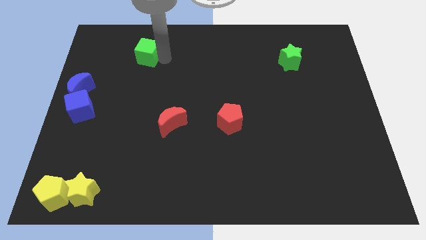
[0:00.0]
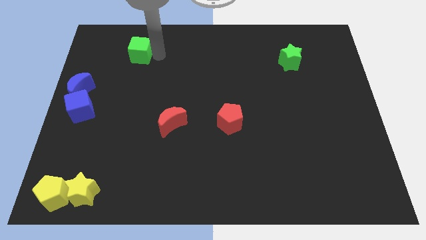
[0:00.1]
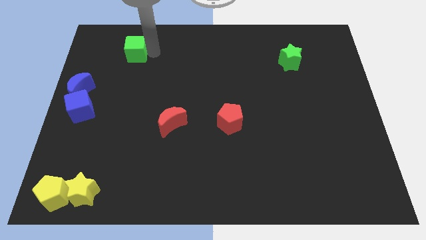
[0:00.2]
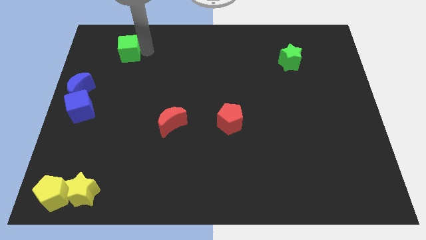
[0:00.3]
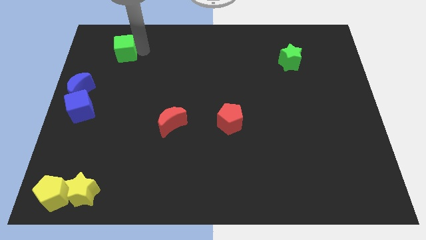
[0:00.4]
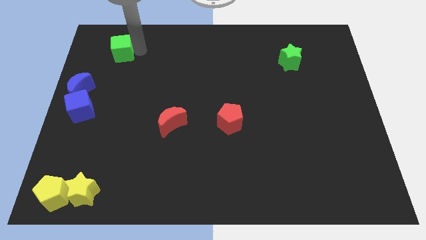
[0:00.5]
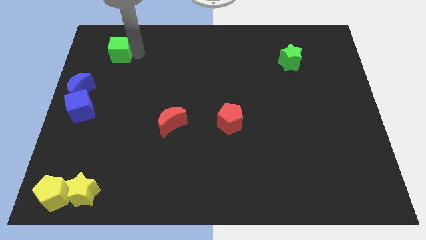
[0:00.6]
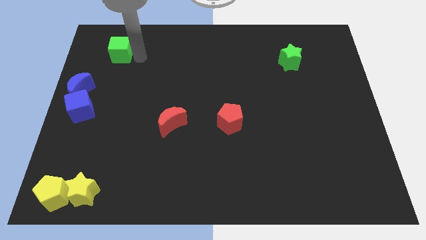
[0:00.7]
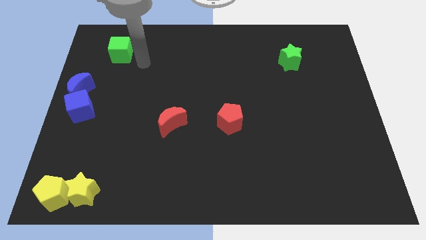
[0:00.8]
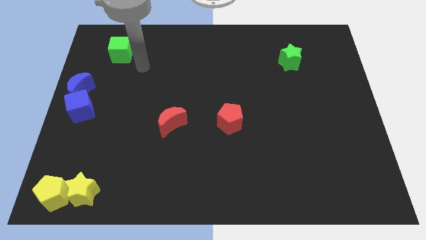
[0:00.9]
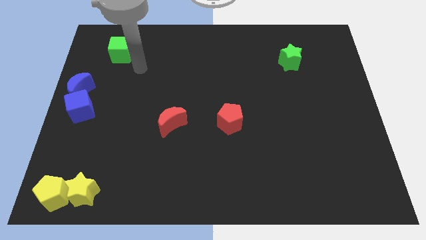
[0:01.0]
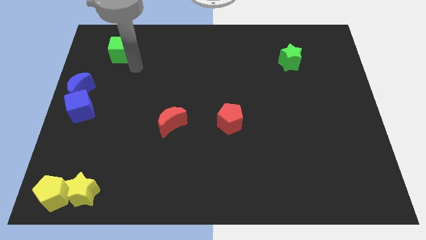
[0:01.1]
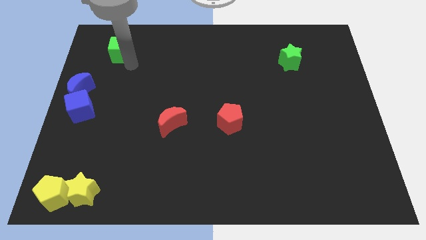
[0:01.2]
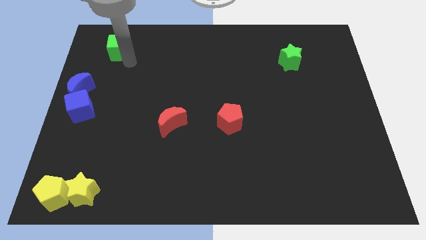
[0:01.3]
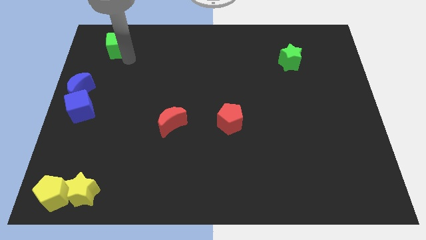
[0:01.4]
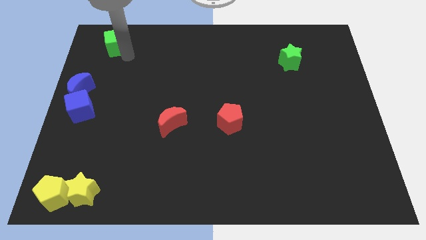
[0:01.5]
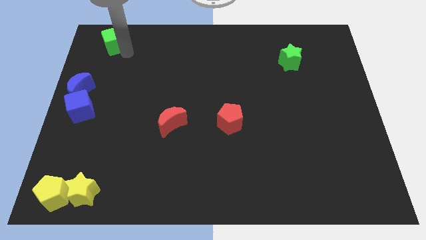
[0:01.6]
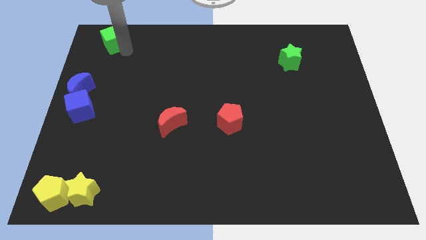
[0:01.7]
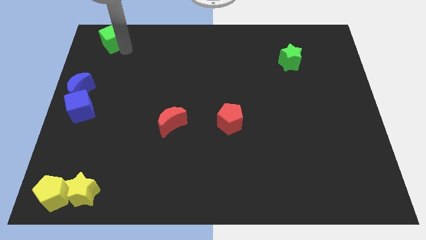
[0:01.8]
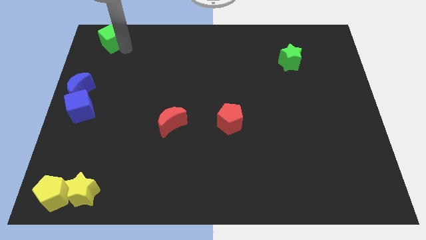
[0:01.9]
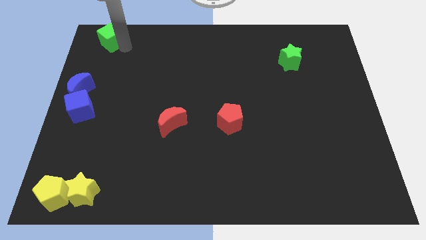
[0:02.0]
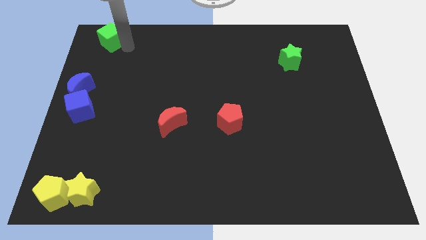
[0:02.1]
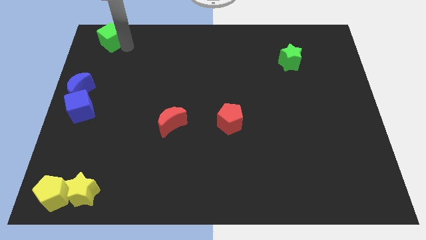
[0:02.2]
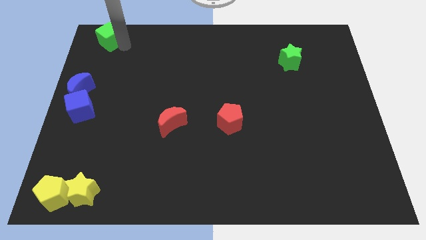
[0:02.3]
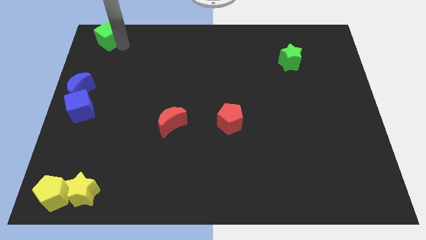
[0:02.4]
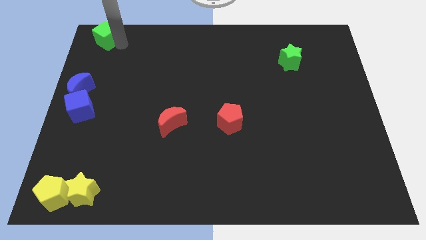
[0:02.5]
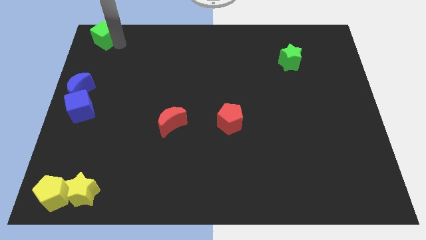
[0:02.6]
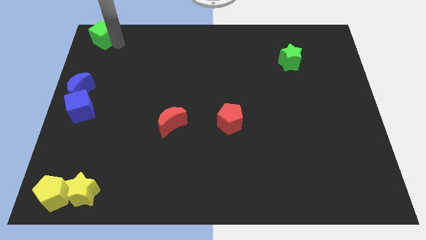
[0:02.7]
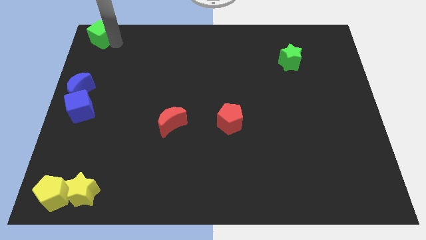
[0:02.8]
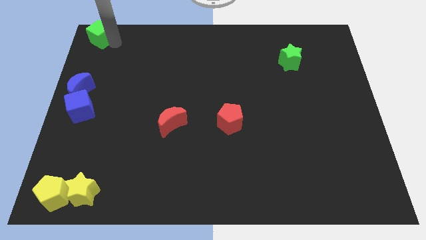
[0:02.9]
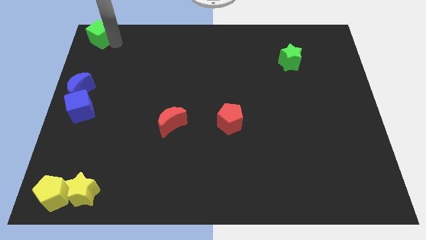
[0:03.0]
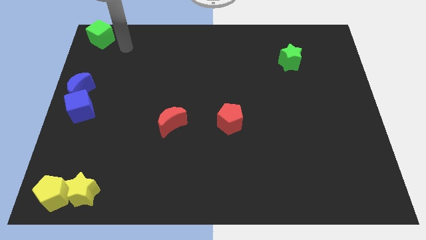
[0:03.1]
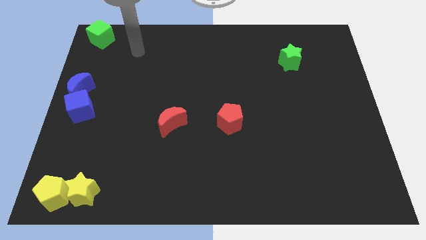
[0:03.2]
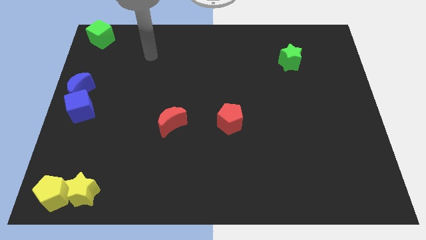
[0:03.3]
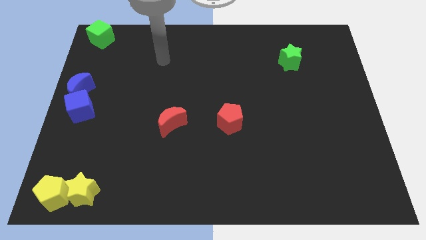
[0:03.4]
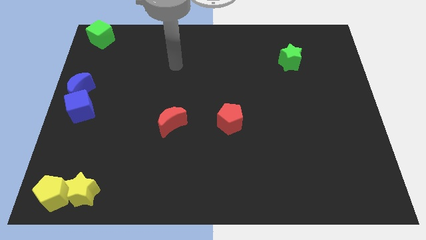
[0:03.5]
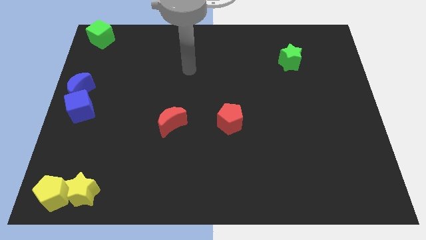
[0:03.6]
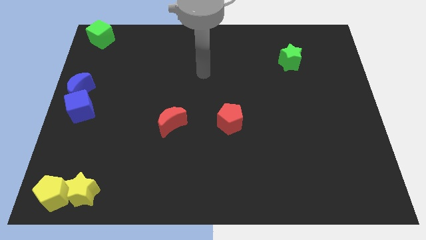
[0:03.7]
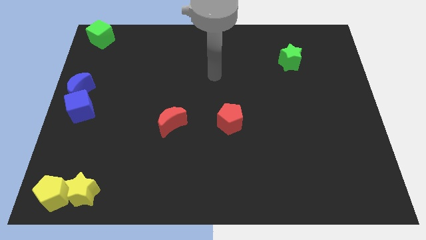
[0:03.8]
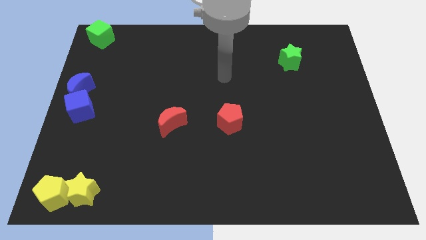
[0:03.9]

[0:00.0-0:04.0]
move the green cube to the top left

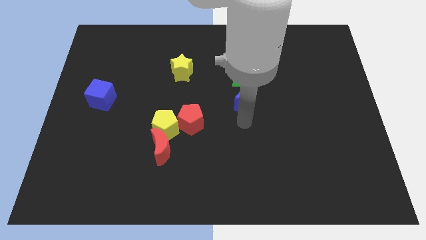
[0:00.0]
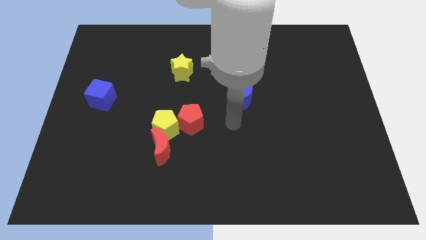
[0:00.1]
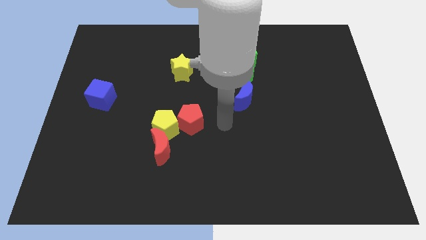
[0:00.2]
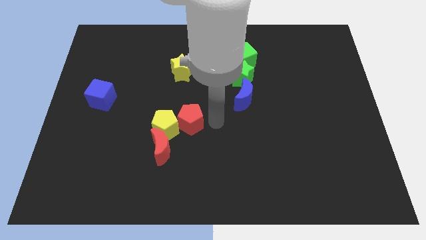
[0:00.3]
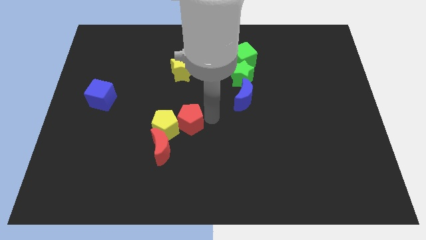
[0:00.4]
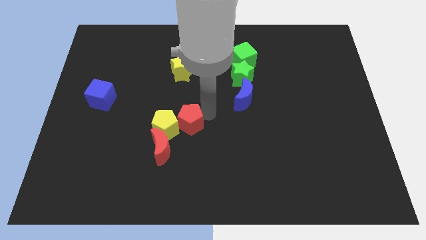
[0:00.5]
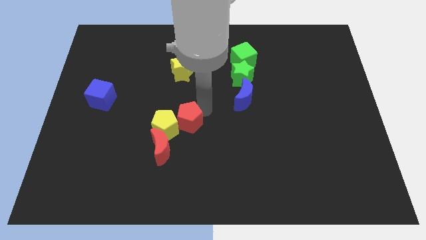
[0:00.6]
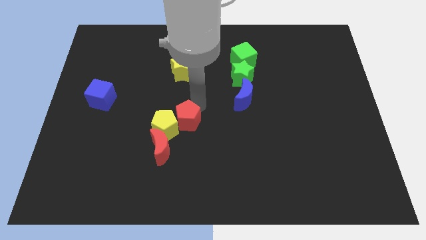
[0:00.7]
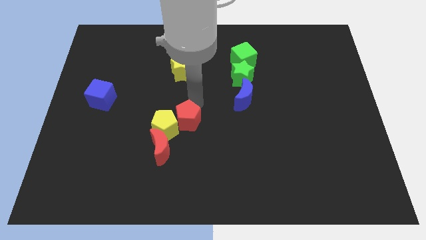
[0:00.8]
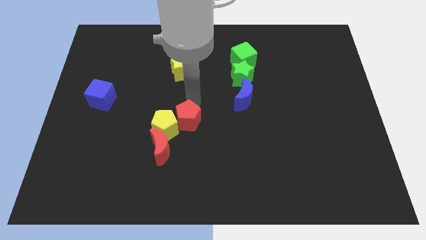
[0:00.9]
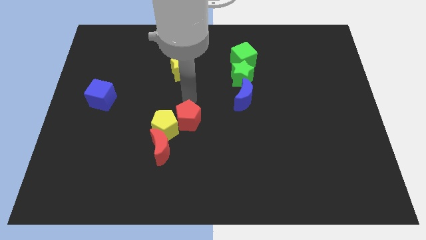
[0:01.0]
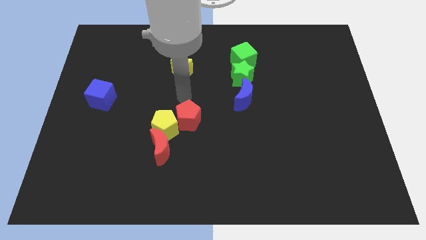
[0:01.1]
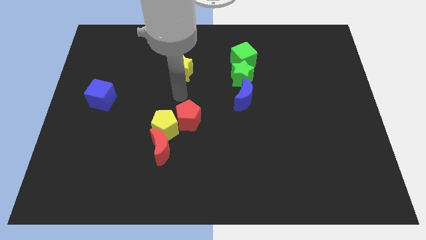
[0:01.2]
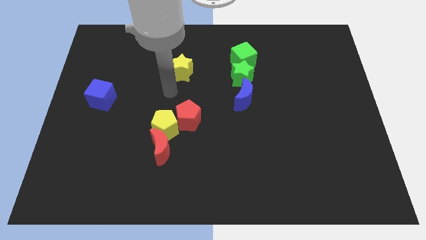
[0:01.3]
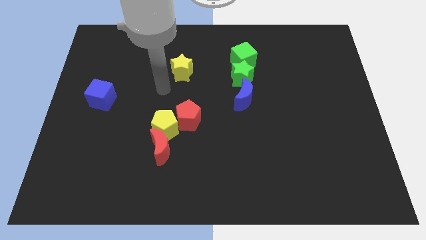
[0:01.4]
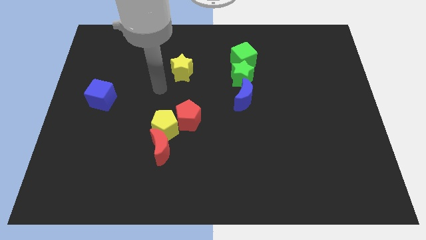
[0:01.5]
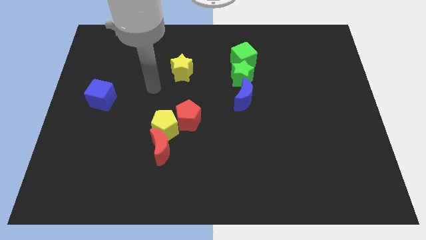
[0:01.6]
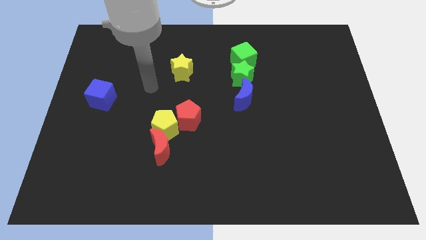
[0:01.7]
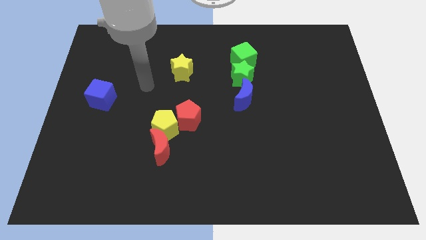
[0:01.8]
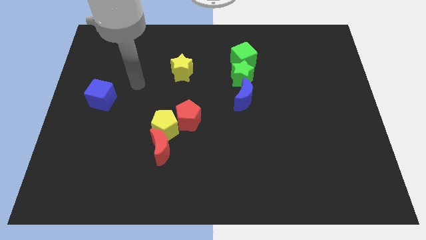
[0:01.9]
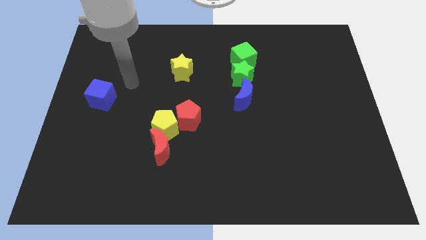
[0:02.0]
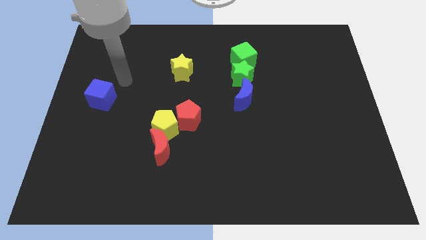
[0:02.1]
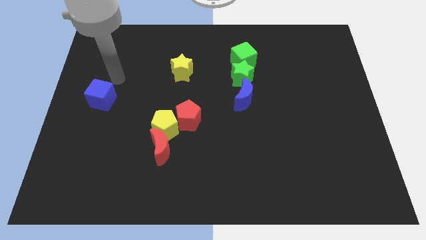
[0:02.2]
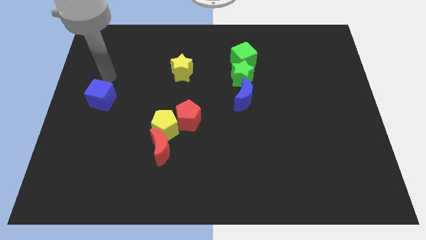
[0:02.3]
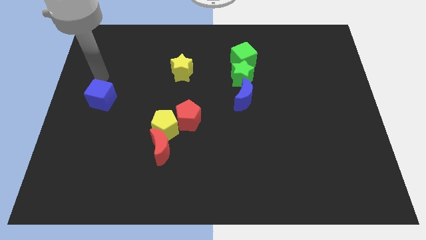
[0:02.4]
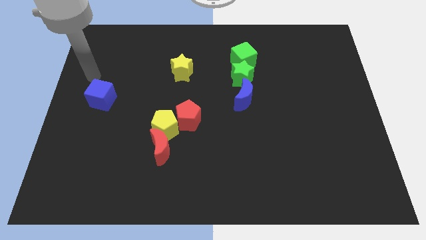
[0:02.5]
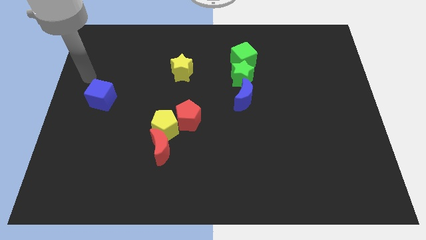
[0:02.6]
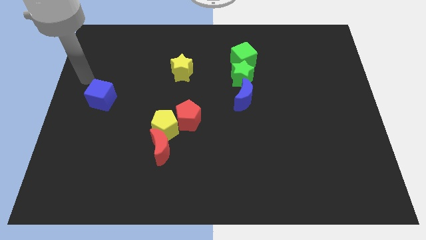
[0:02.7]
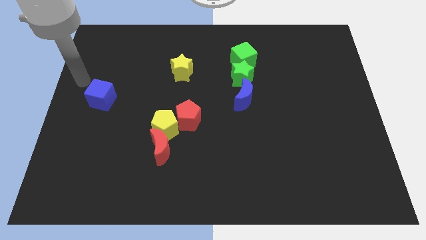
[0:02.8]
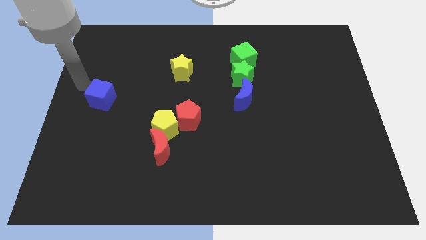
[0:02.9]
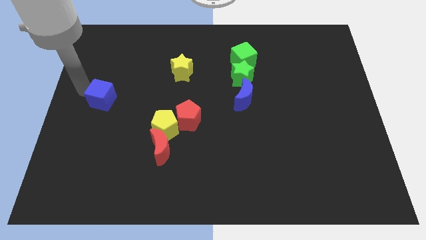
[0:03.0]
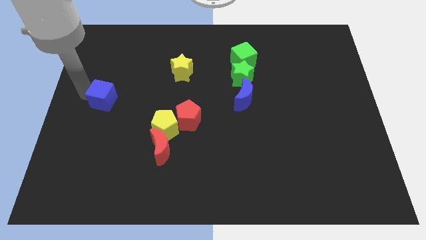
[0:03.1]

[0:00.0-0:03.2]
move your arm close to the blue cube

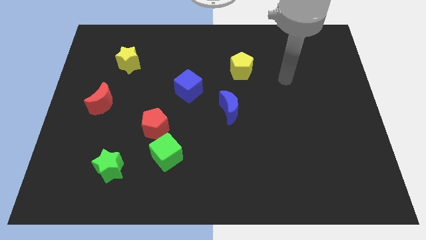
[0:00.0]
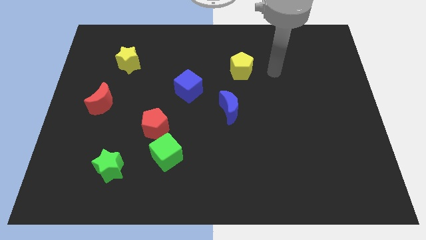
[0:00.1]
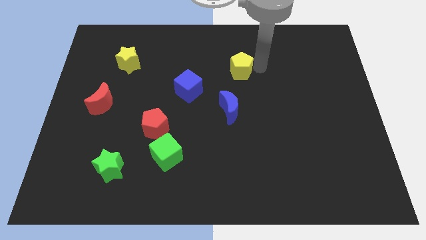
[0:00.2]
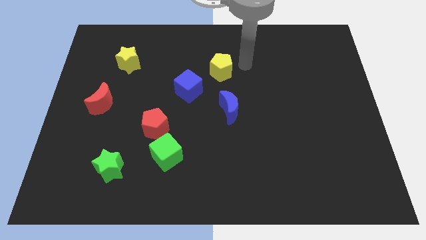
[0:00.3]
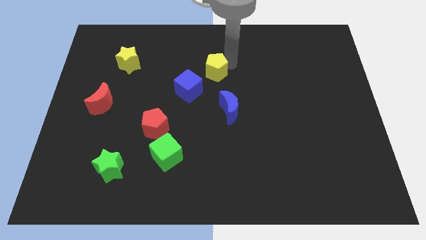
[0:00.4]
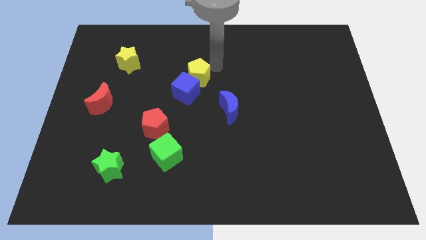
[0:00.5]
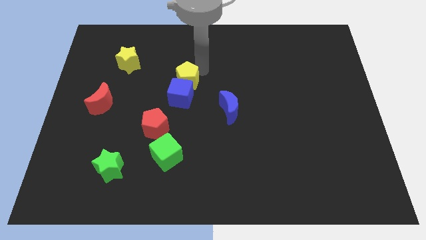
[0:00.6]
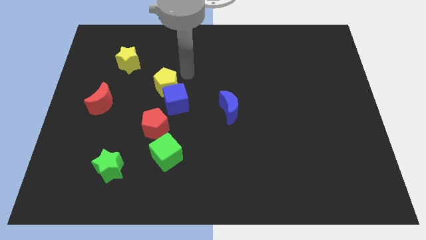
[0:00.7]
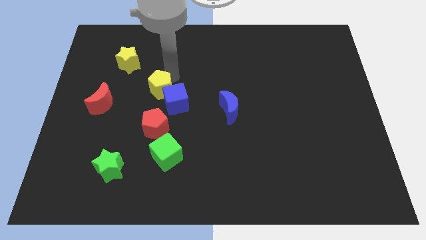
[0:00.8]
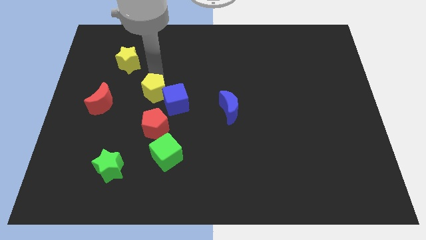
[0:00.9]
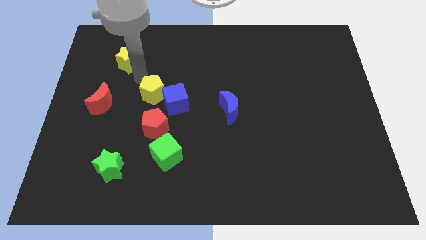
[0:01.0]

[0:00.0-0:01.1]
move the yellow pentagon into the blue cube

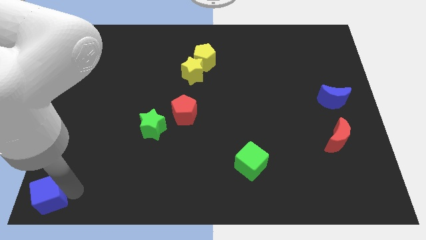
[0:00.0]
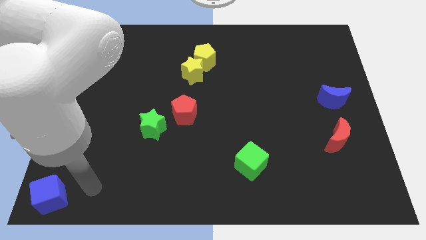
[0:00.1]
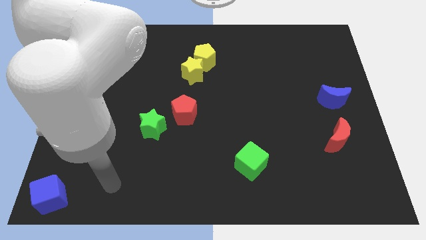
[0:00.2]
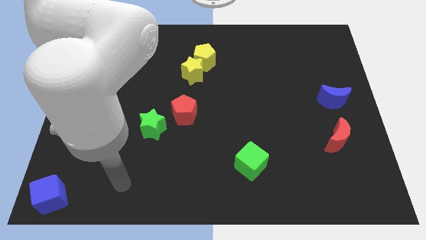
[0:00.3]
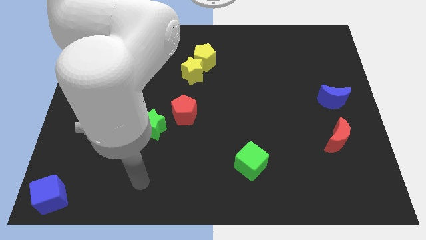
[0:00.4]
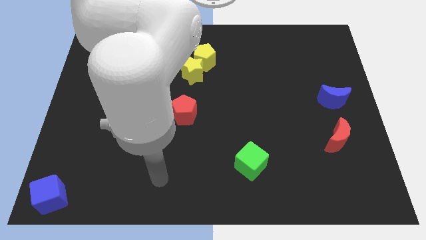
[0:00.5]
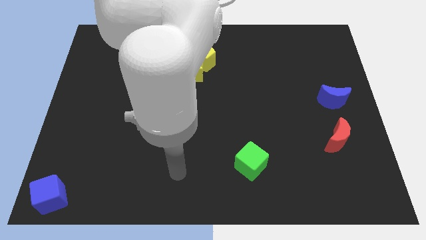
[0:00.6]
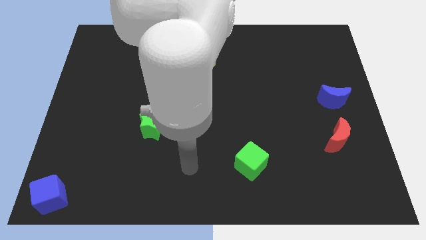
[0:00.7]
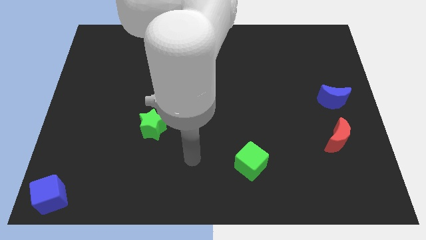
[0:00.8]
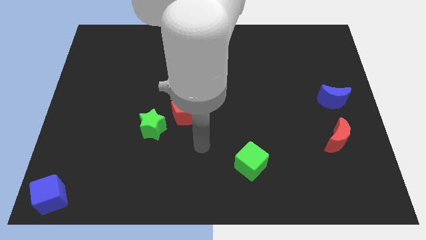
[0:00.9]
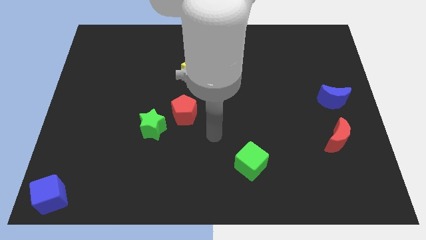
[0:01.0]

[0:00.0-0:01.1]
place your arm in between the red pentagon and green cube
